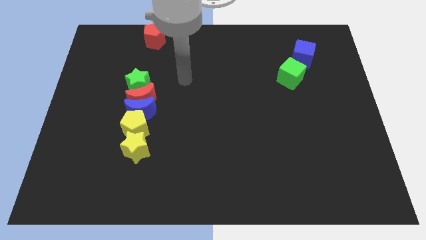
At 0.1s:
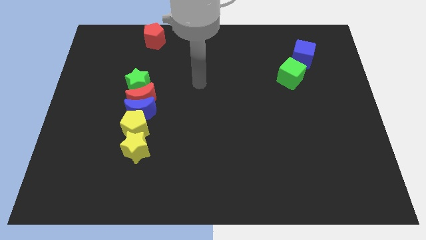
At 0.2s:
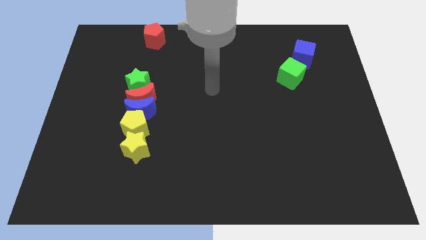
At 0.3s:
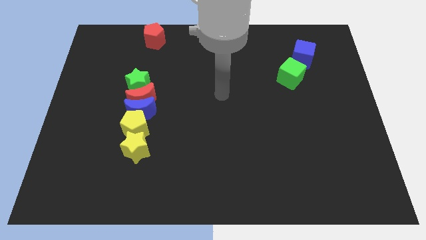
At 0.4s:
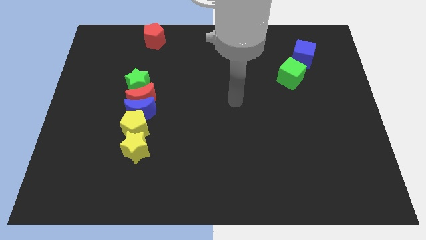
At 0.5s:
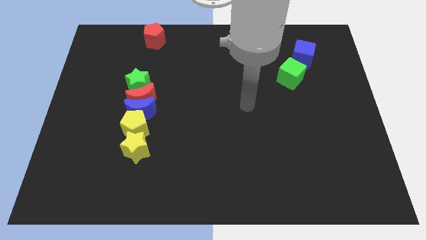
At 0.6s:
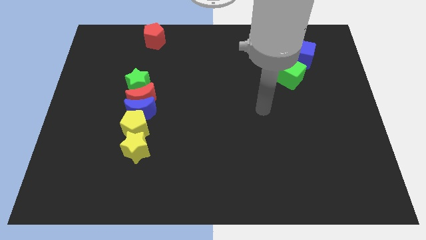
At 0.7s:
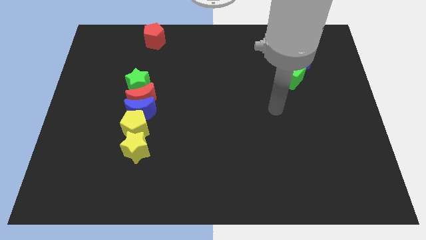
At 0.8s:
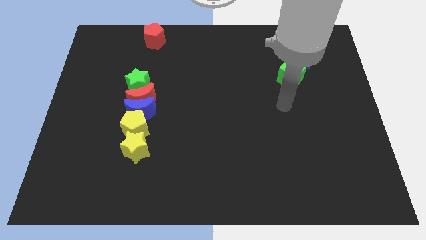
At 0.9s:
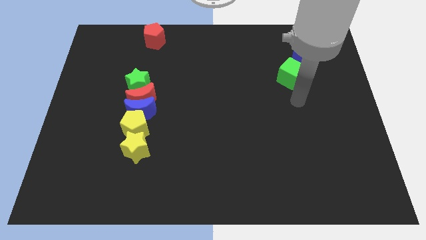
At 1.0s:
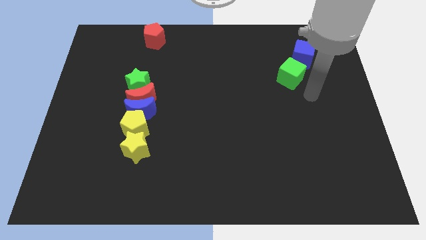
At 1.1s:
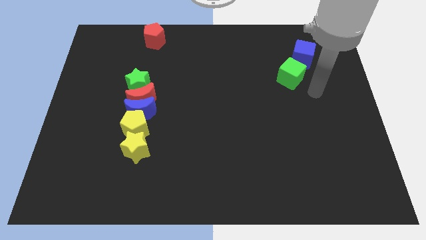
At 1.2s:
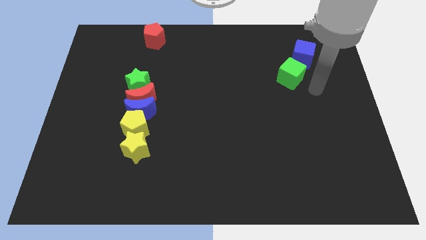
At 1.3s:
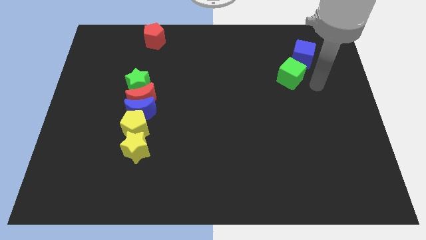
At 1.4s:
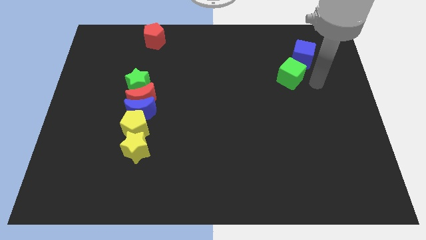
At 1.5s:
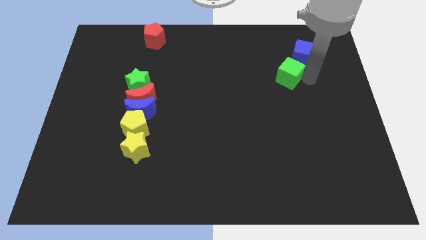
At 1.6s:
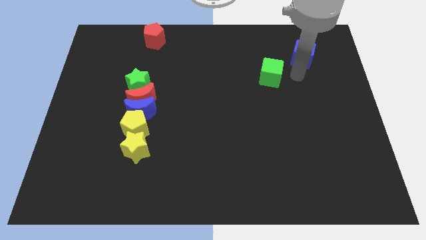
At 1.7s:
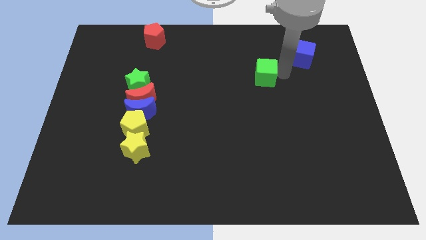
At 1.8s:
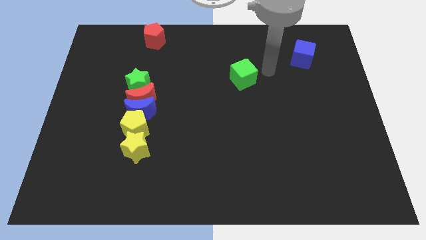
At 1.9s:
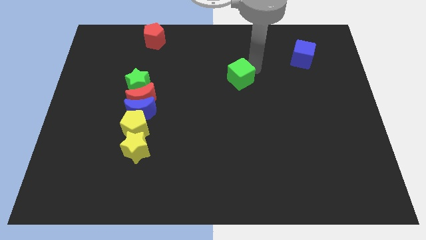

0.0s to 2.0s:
move the green cube towards the left

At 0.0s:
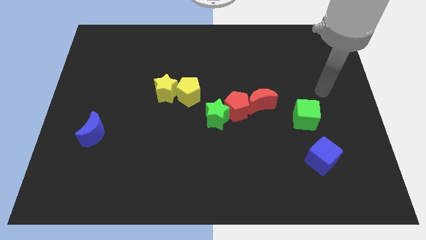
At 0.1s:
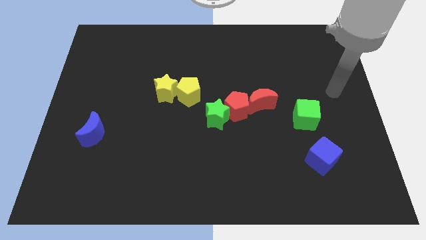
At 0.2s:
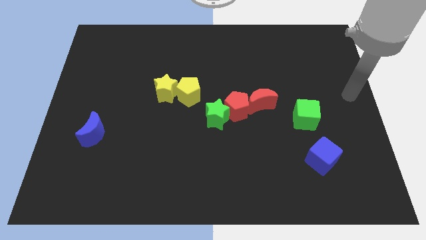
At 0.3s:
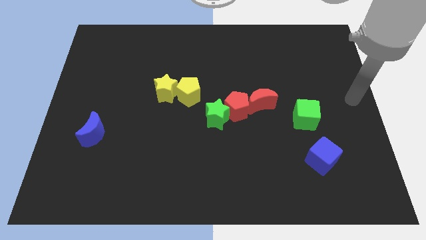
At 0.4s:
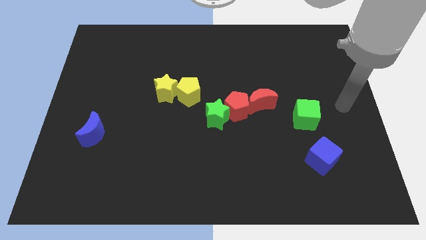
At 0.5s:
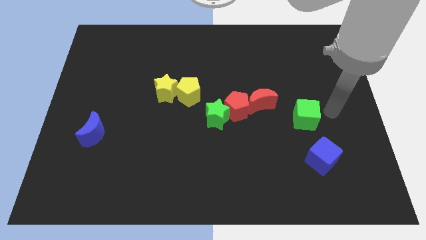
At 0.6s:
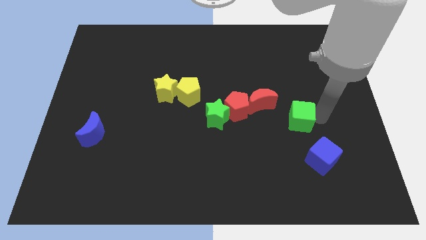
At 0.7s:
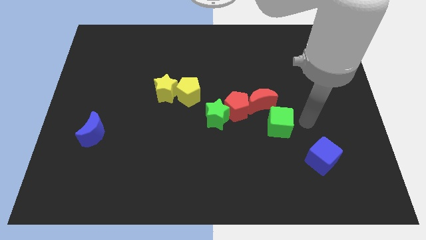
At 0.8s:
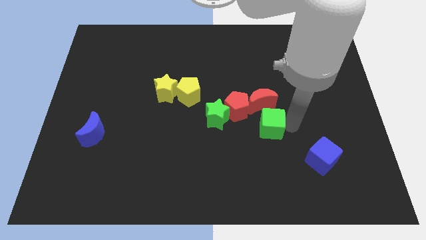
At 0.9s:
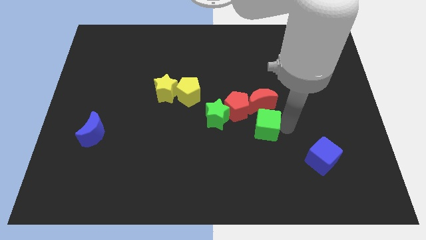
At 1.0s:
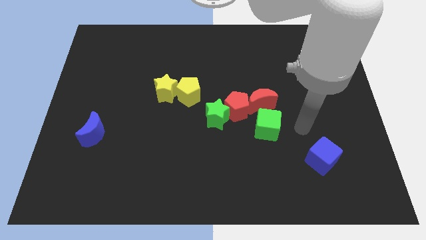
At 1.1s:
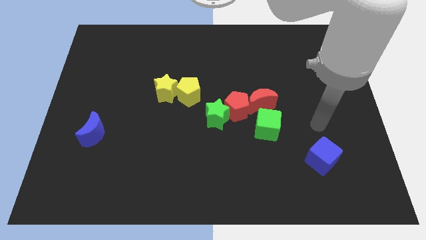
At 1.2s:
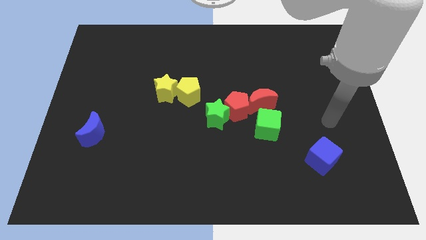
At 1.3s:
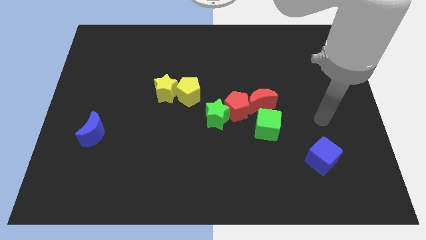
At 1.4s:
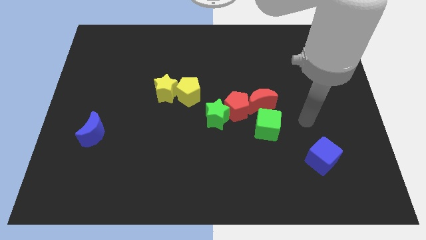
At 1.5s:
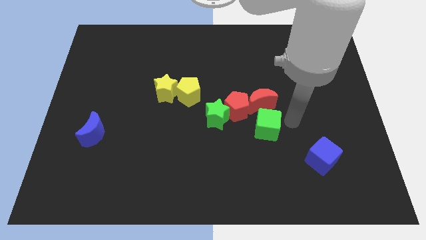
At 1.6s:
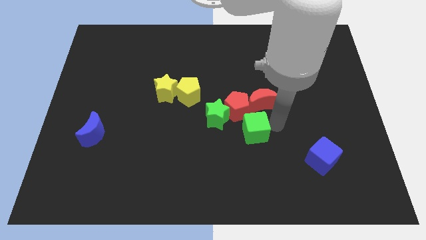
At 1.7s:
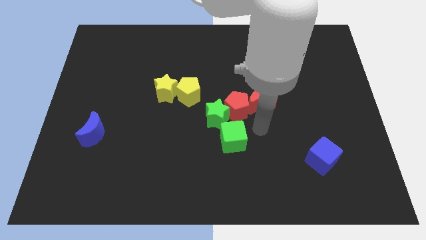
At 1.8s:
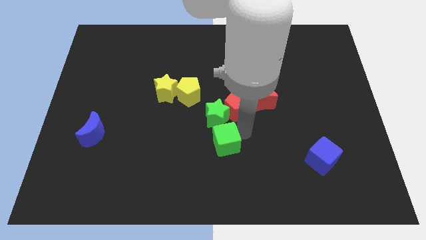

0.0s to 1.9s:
push the green cube to the bottom of the green star

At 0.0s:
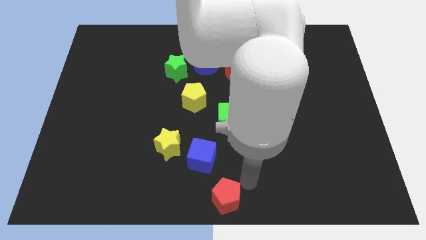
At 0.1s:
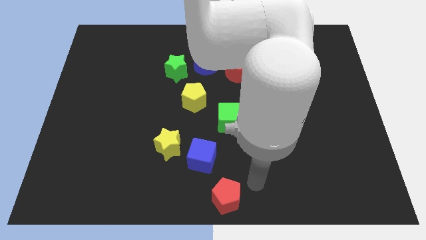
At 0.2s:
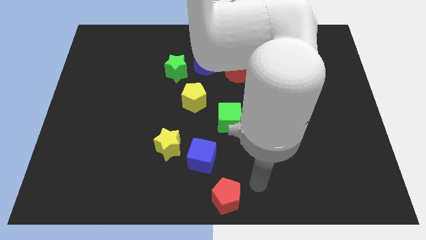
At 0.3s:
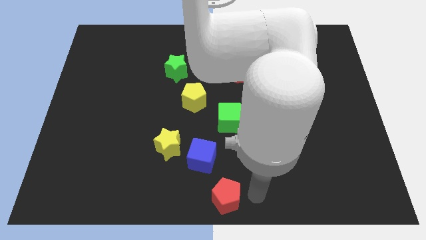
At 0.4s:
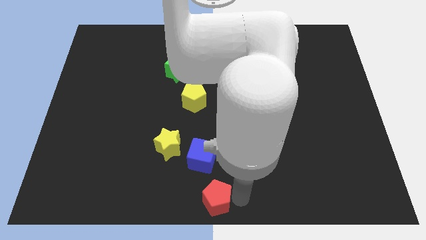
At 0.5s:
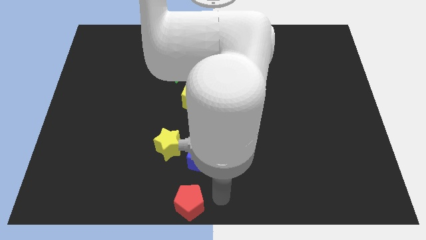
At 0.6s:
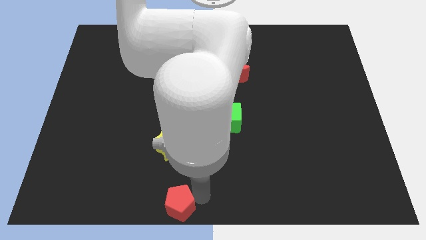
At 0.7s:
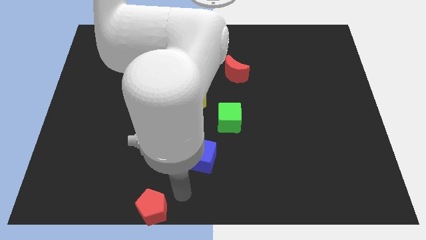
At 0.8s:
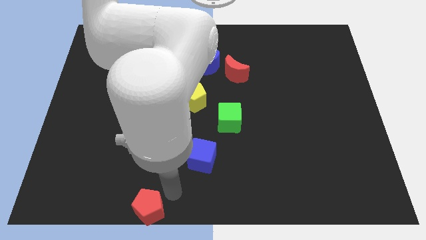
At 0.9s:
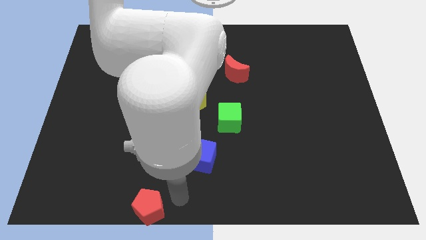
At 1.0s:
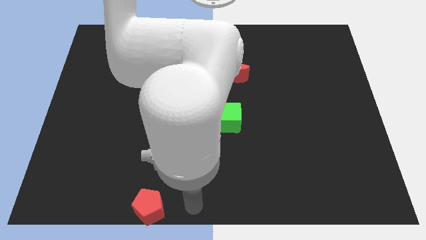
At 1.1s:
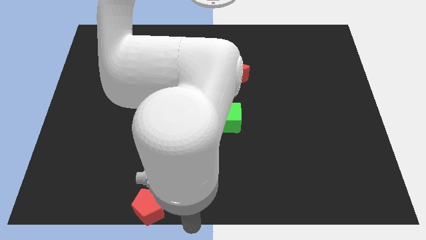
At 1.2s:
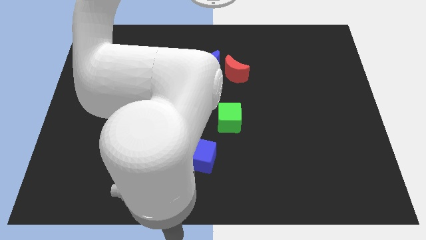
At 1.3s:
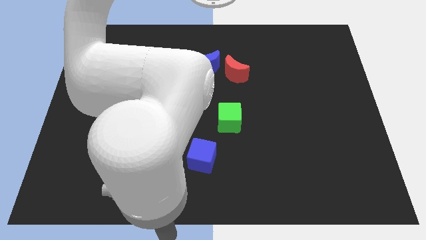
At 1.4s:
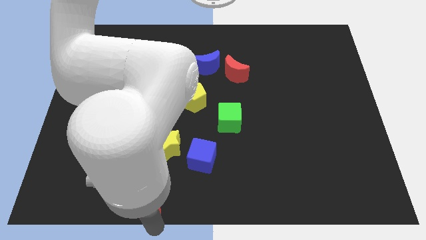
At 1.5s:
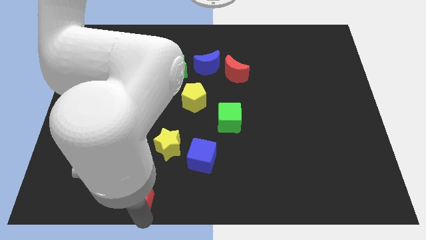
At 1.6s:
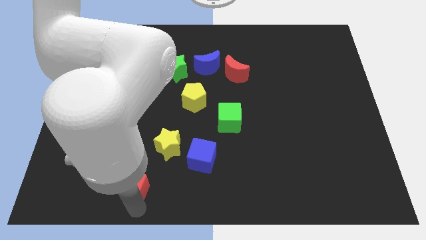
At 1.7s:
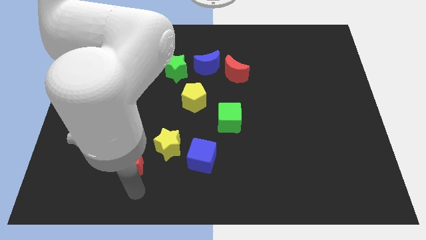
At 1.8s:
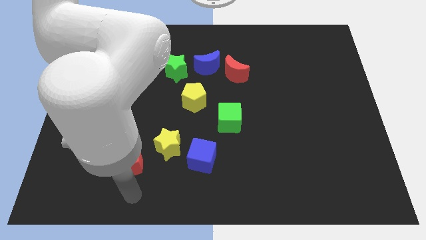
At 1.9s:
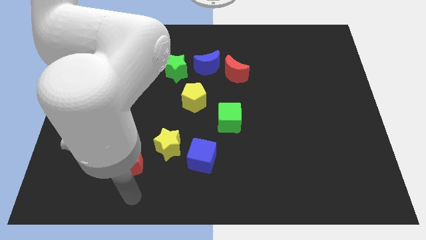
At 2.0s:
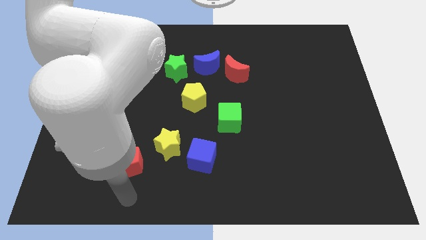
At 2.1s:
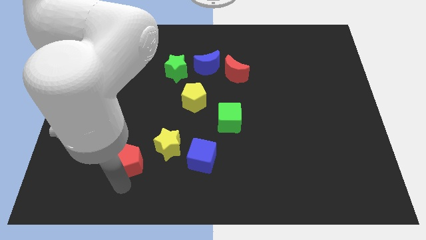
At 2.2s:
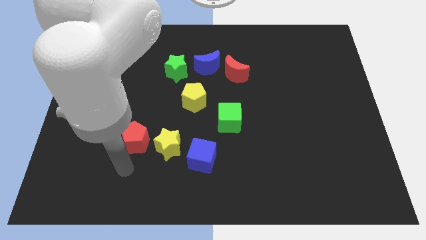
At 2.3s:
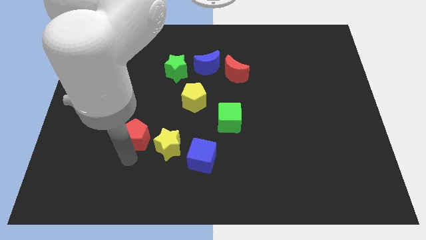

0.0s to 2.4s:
push the red pentagon to the left of the yellow star

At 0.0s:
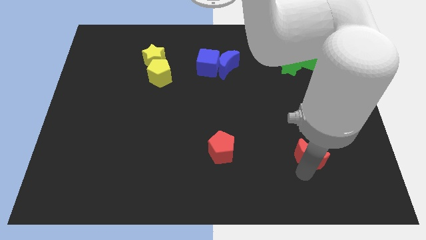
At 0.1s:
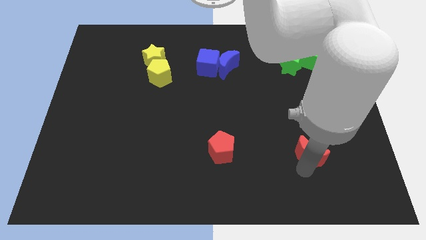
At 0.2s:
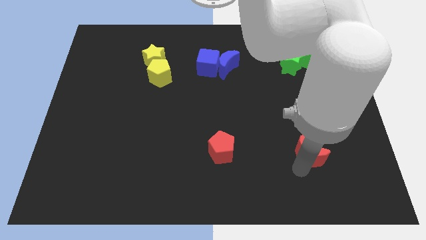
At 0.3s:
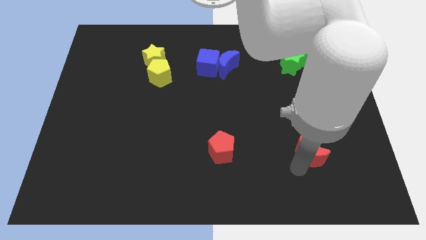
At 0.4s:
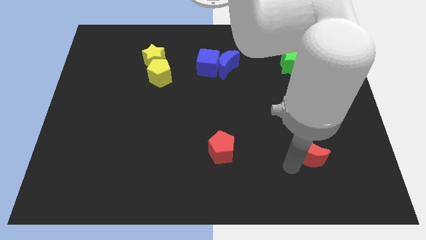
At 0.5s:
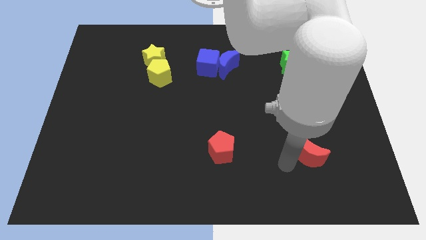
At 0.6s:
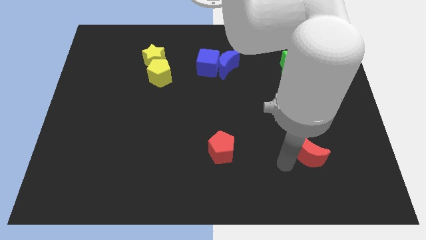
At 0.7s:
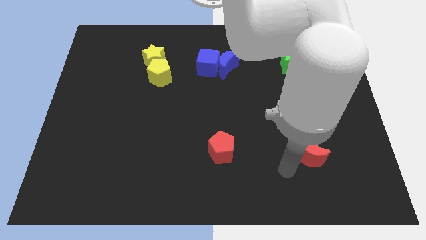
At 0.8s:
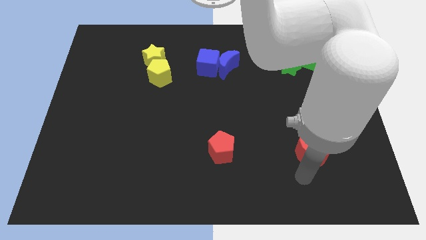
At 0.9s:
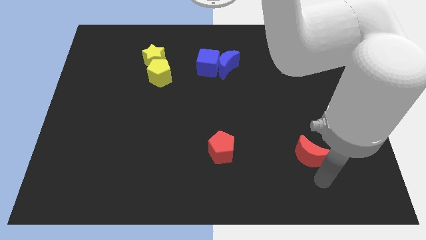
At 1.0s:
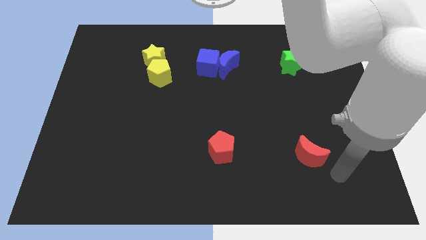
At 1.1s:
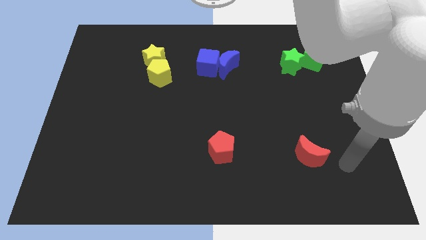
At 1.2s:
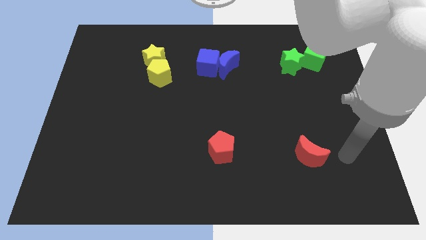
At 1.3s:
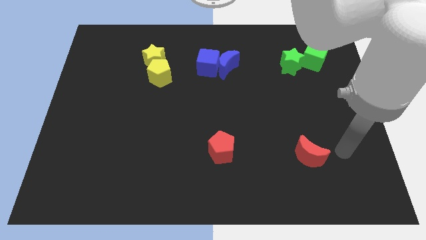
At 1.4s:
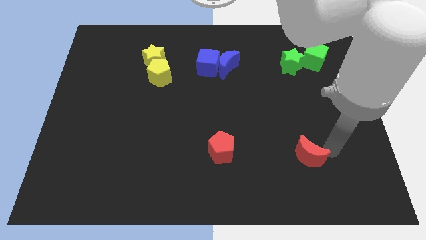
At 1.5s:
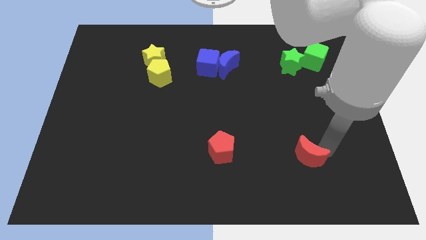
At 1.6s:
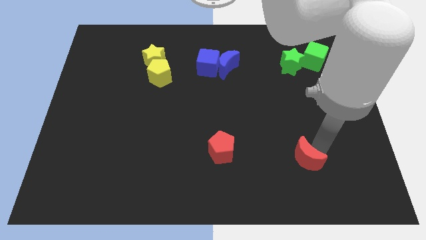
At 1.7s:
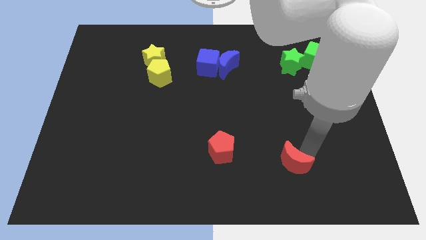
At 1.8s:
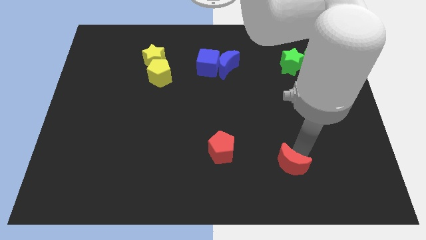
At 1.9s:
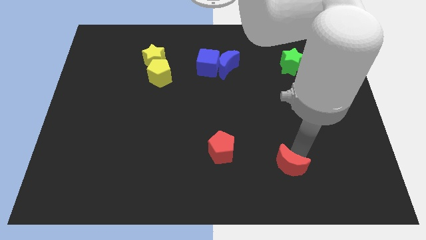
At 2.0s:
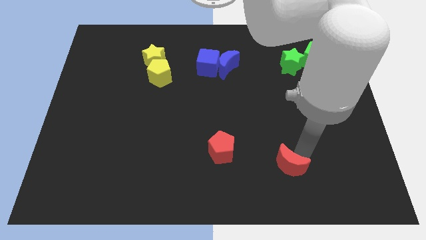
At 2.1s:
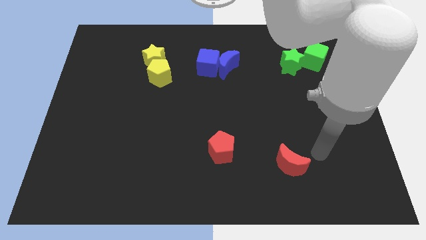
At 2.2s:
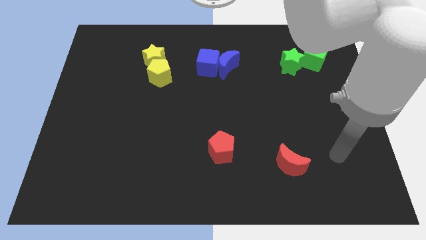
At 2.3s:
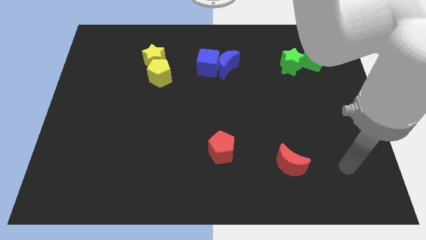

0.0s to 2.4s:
slightly move the red moon down to the board

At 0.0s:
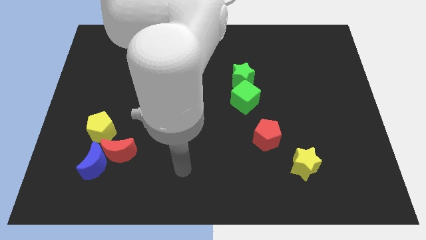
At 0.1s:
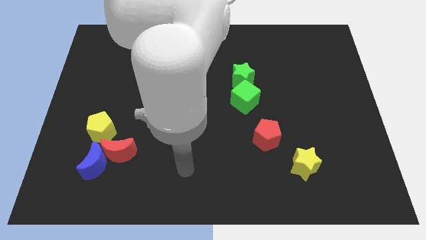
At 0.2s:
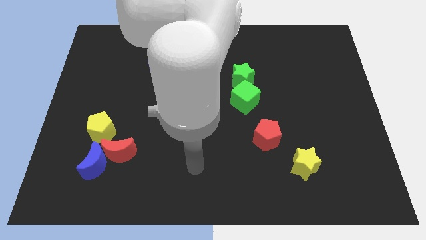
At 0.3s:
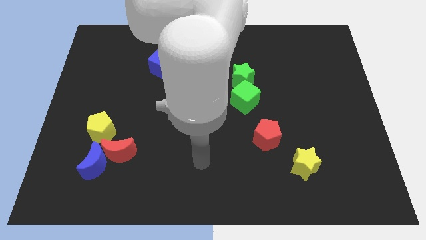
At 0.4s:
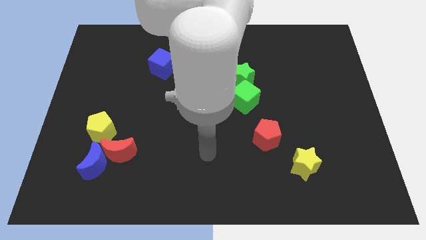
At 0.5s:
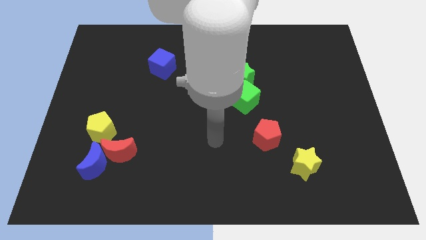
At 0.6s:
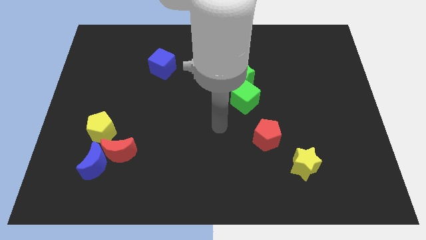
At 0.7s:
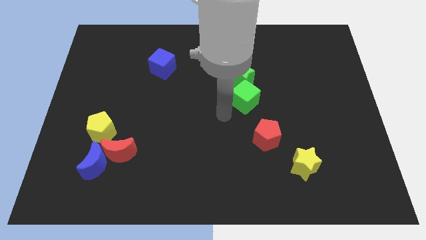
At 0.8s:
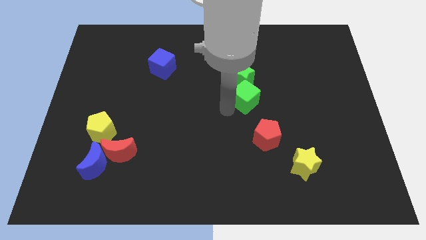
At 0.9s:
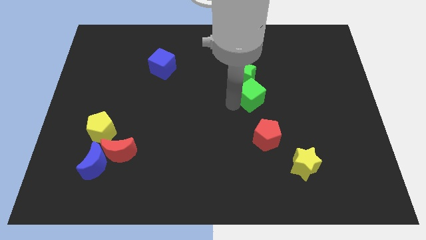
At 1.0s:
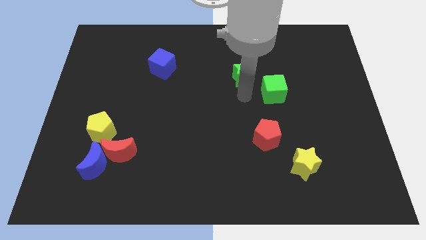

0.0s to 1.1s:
seperate green cube and green star
